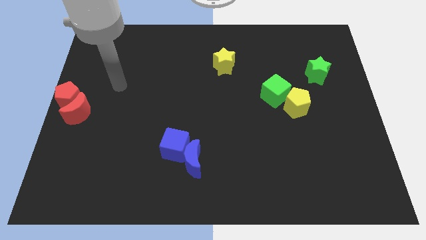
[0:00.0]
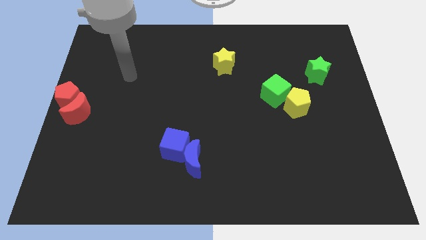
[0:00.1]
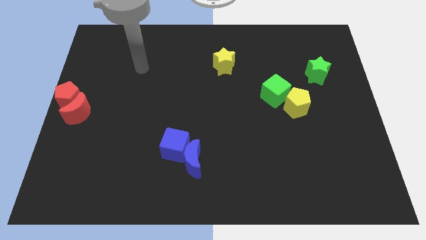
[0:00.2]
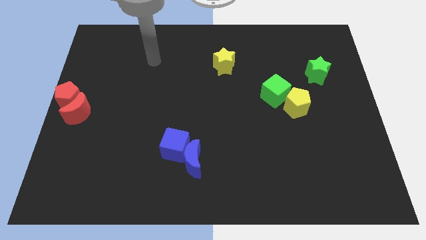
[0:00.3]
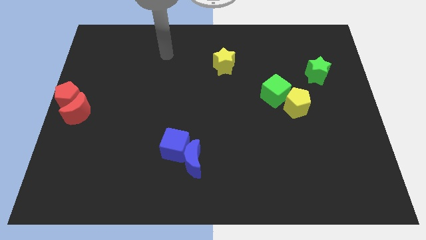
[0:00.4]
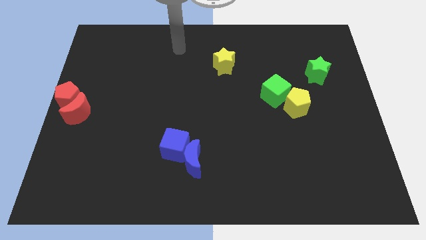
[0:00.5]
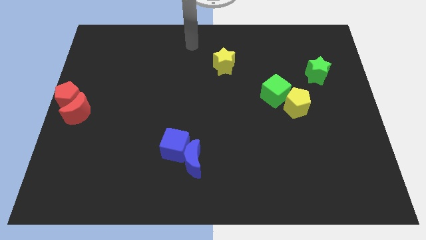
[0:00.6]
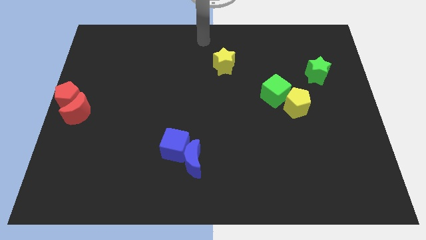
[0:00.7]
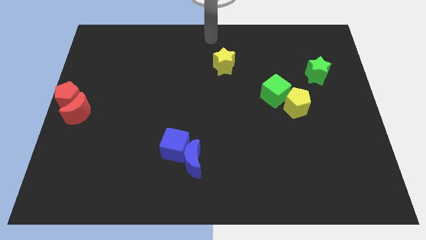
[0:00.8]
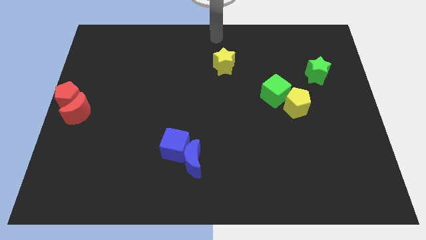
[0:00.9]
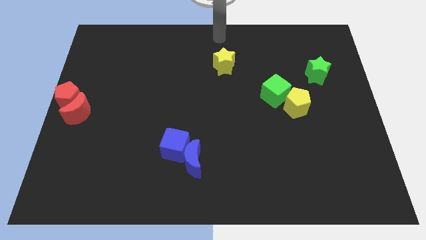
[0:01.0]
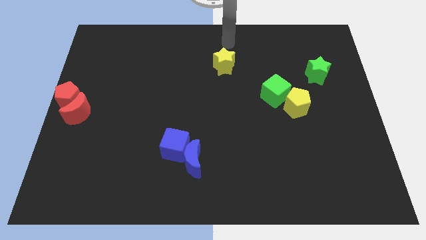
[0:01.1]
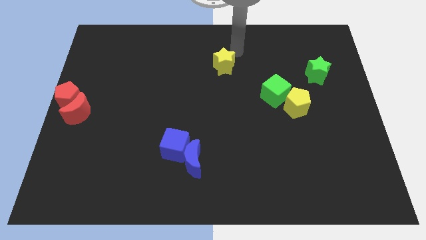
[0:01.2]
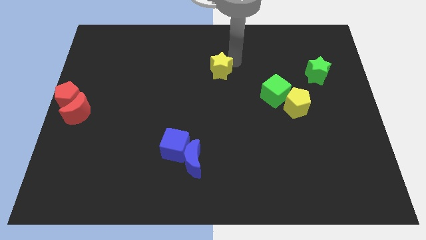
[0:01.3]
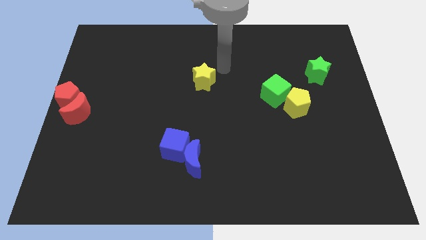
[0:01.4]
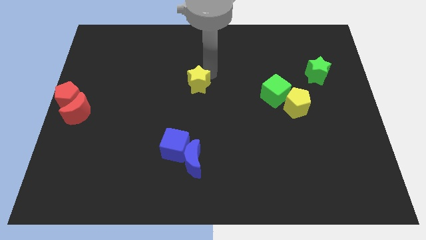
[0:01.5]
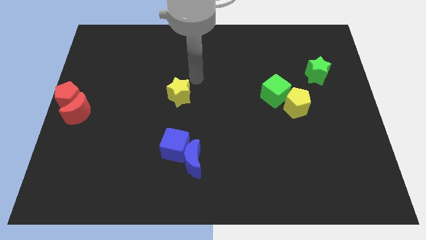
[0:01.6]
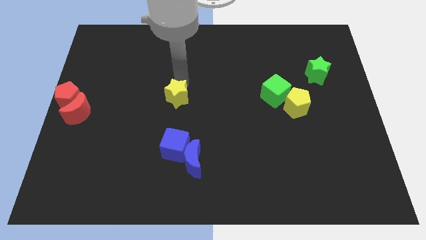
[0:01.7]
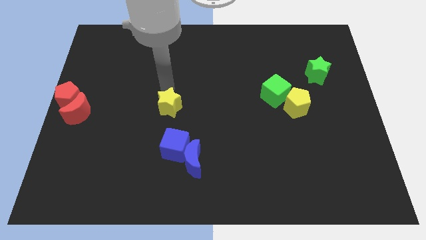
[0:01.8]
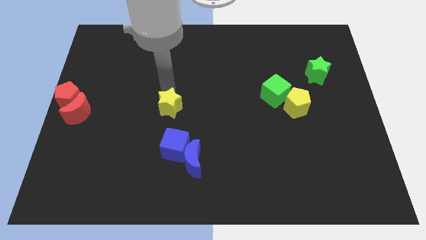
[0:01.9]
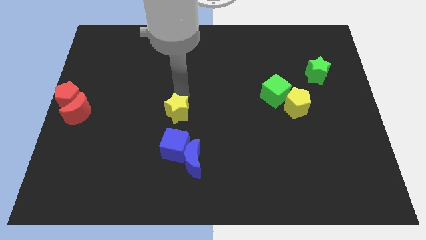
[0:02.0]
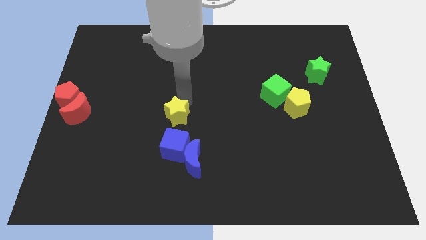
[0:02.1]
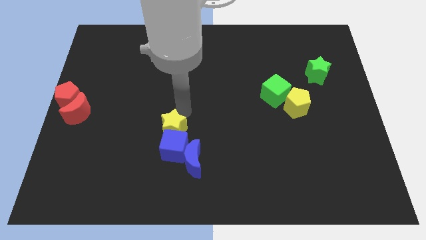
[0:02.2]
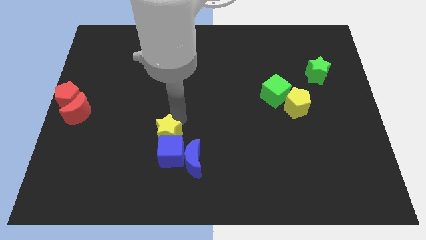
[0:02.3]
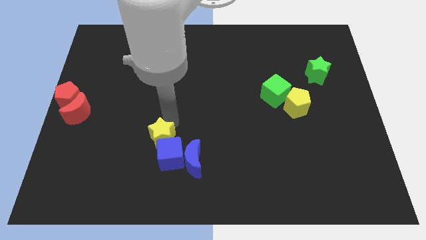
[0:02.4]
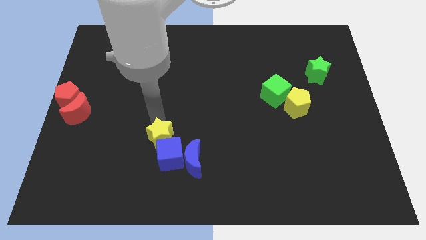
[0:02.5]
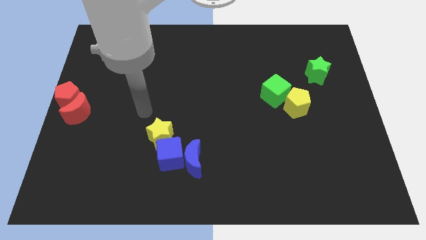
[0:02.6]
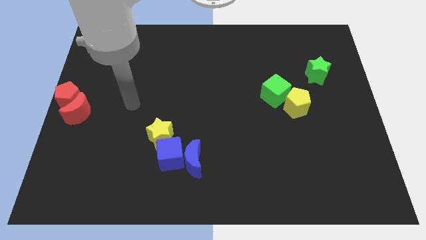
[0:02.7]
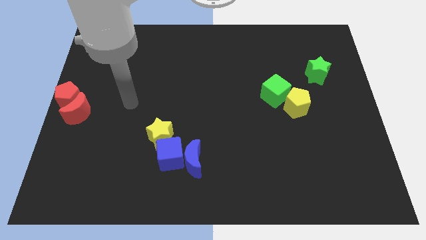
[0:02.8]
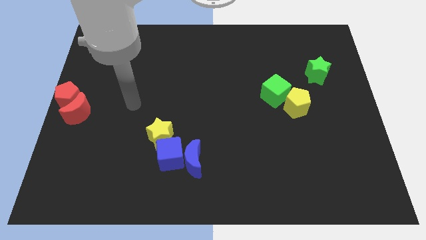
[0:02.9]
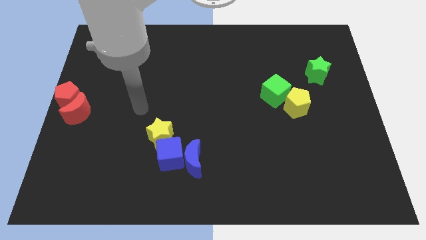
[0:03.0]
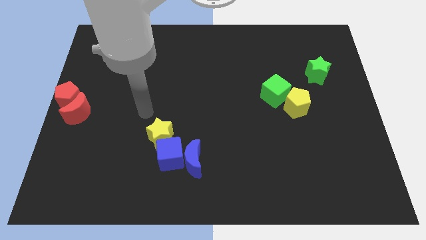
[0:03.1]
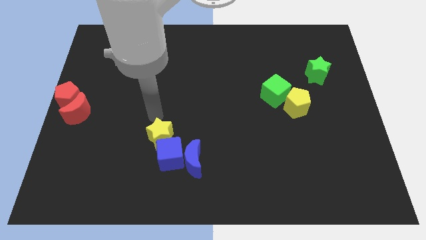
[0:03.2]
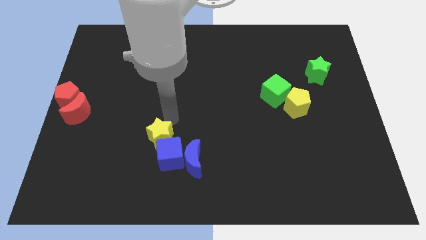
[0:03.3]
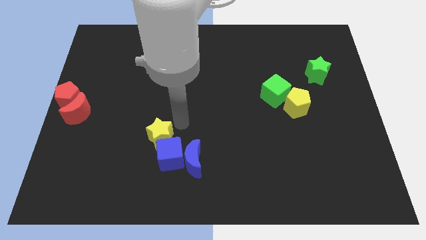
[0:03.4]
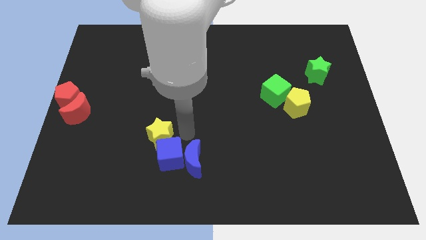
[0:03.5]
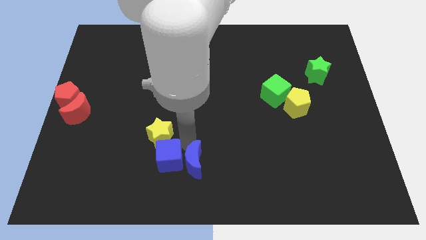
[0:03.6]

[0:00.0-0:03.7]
push the yellow star into the blue cube

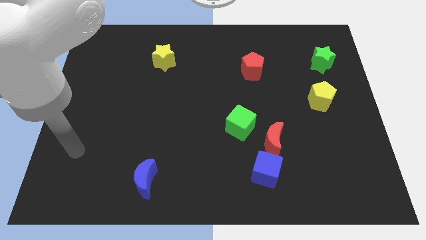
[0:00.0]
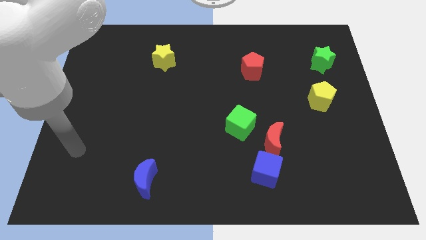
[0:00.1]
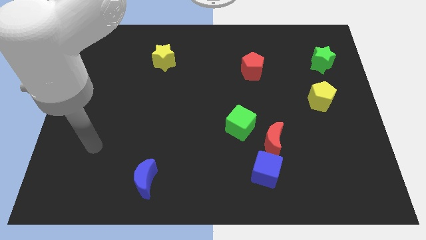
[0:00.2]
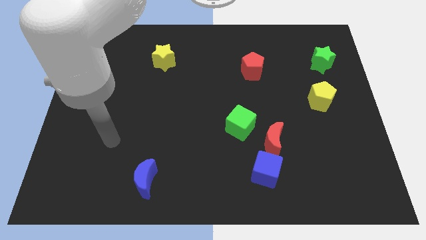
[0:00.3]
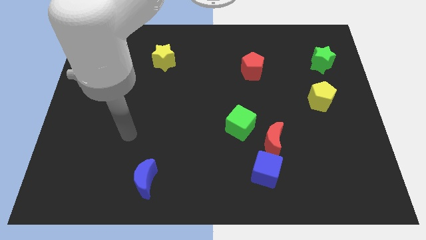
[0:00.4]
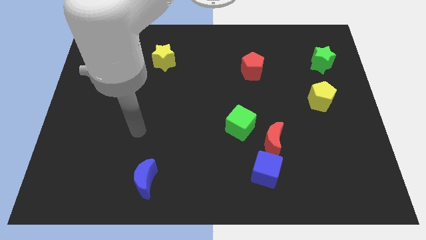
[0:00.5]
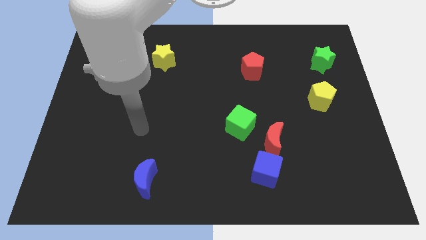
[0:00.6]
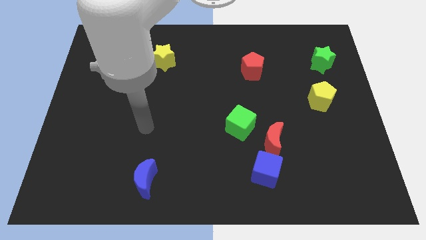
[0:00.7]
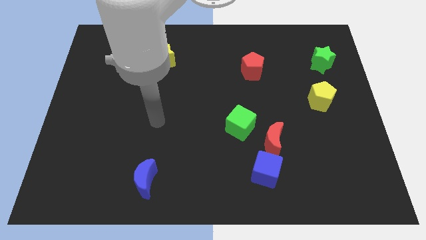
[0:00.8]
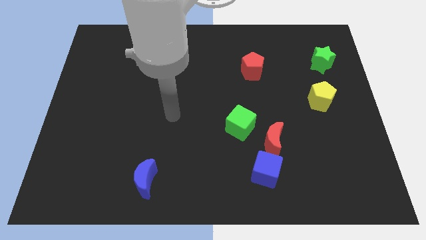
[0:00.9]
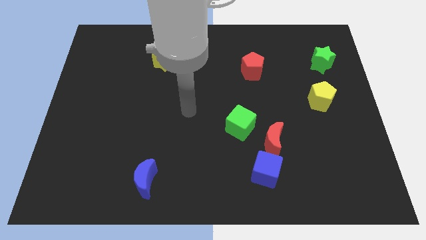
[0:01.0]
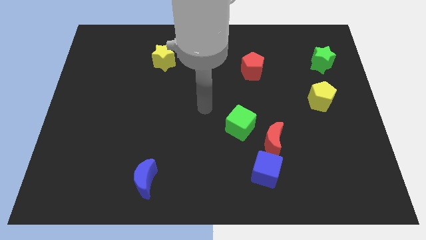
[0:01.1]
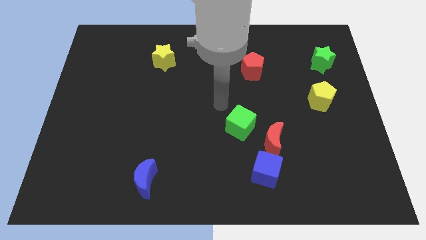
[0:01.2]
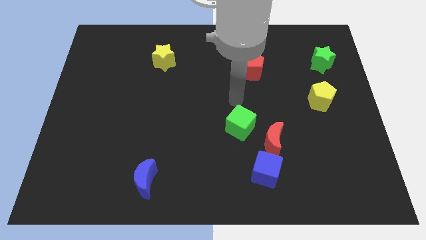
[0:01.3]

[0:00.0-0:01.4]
place your arm above green cube

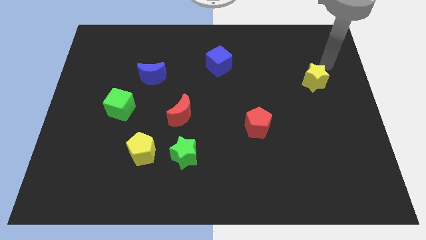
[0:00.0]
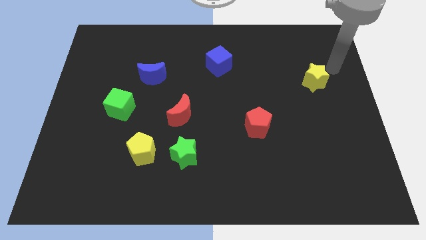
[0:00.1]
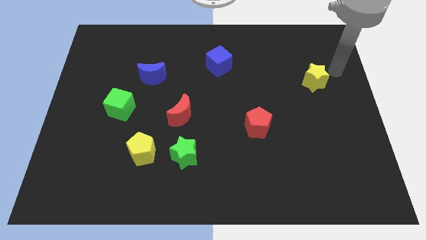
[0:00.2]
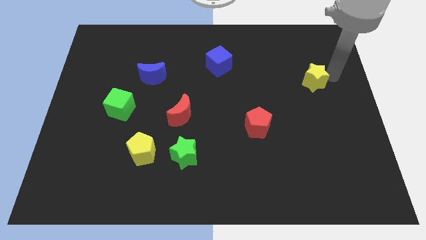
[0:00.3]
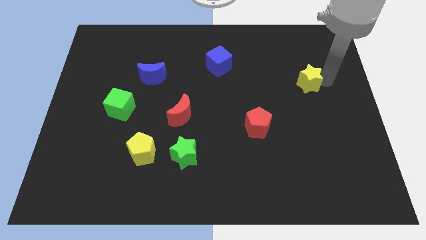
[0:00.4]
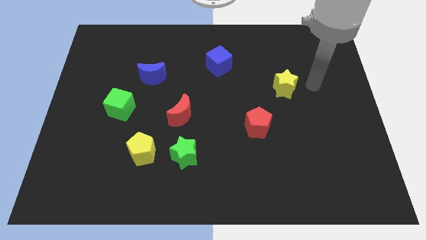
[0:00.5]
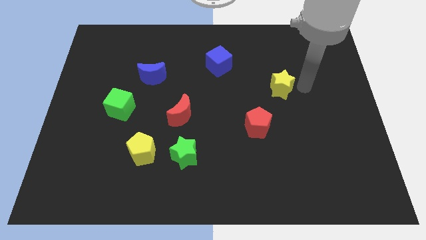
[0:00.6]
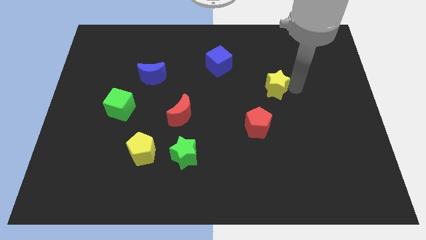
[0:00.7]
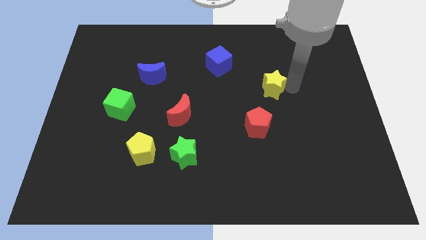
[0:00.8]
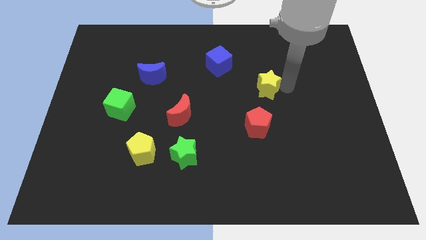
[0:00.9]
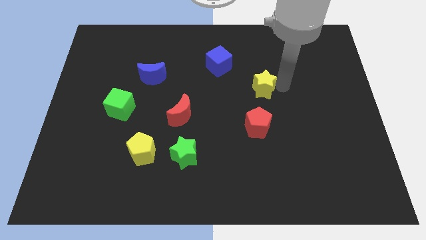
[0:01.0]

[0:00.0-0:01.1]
move the yellow star above the red pentagon

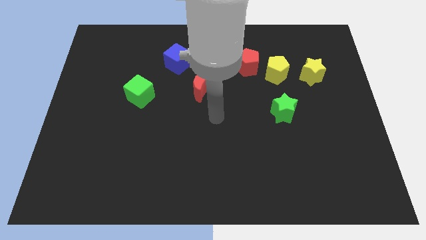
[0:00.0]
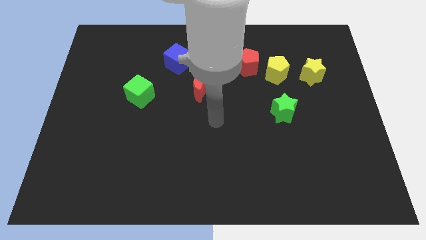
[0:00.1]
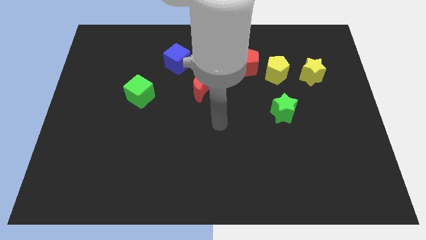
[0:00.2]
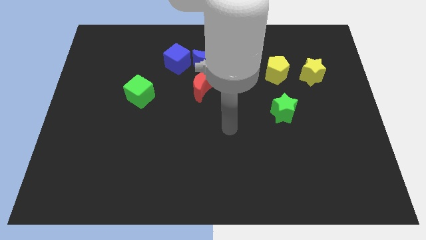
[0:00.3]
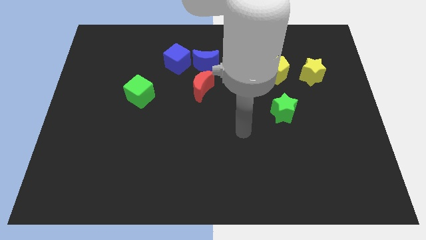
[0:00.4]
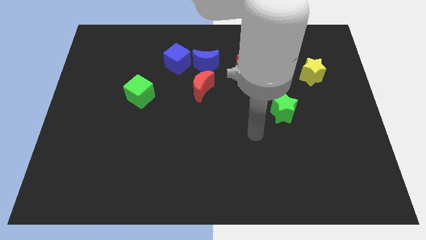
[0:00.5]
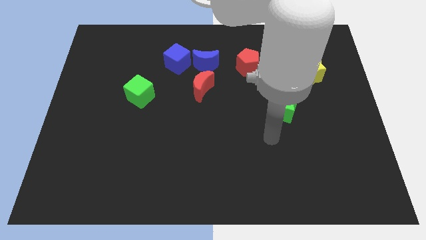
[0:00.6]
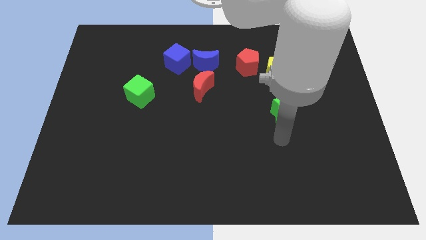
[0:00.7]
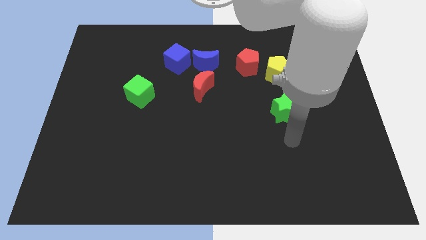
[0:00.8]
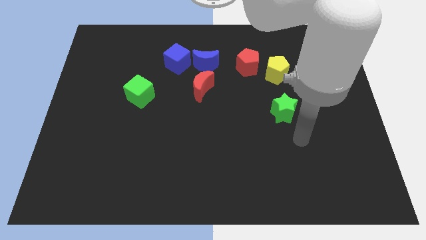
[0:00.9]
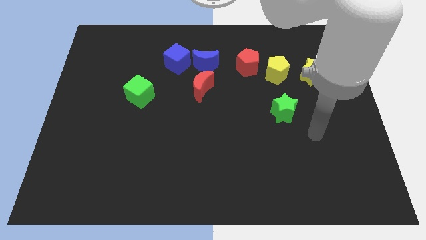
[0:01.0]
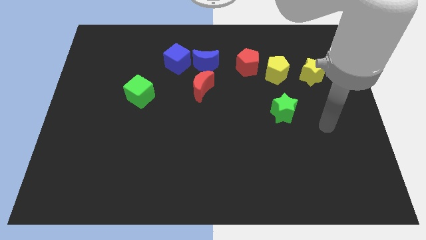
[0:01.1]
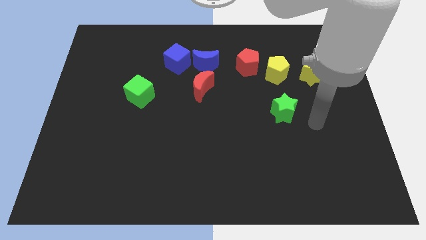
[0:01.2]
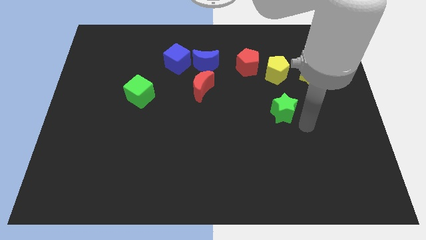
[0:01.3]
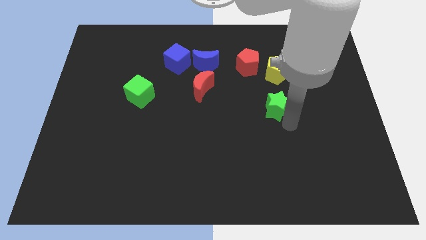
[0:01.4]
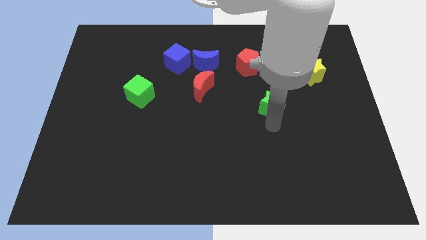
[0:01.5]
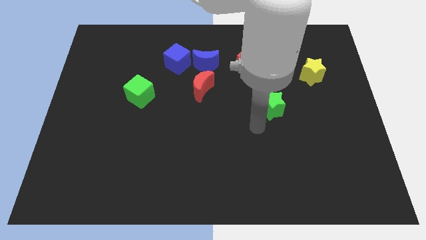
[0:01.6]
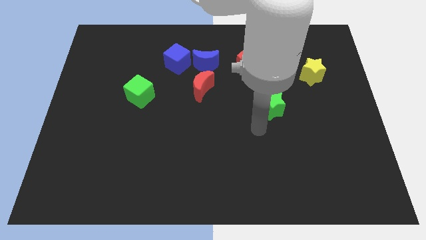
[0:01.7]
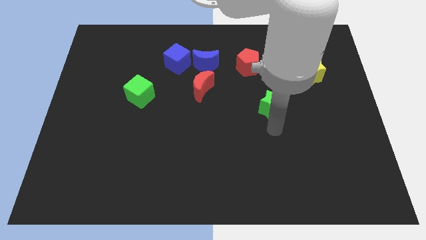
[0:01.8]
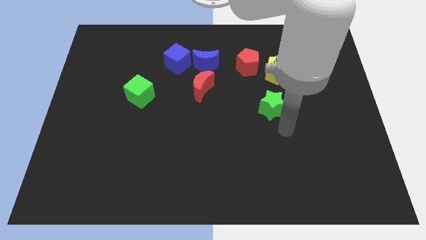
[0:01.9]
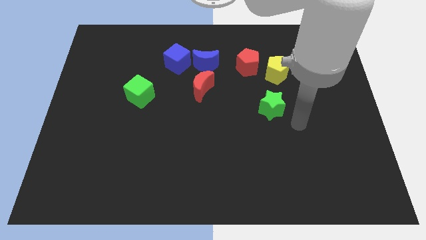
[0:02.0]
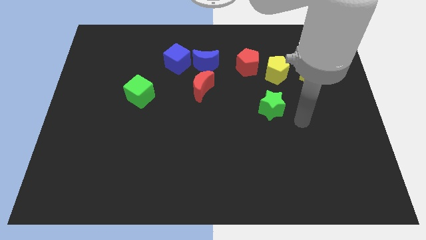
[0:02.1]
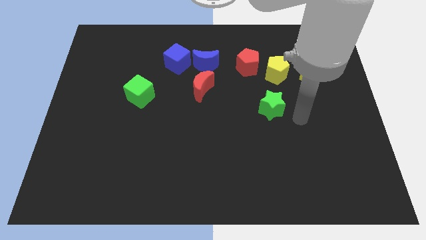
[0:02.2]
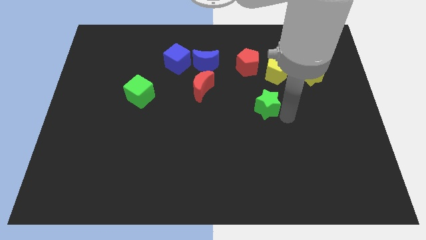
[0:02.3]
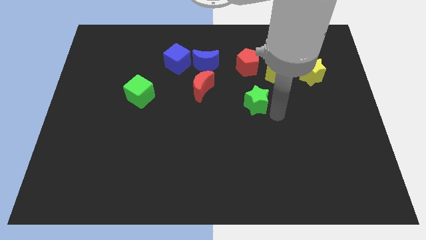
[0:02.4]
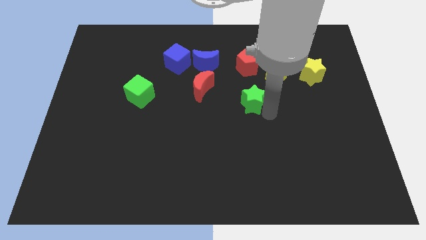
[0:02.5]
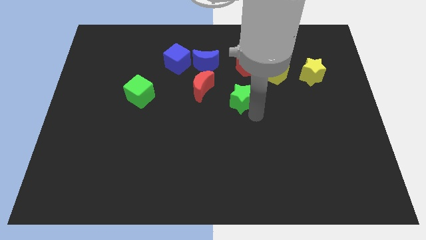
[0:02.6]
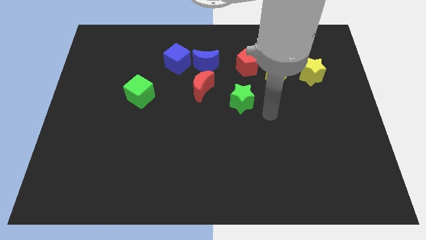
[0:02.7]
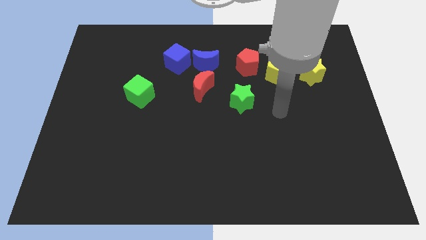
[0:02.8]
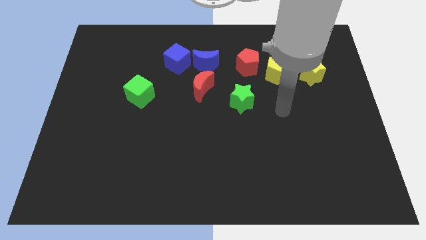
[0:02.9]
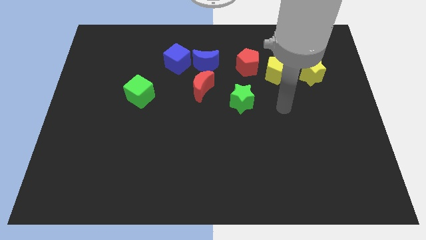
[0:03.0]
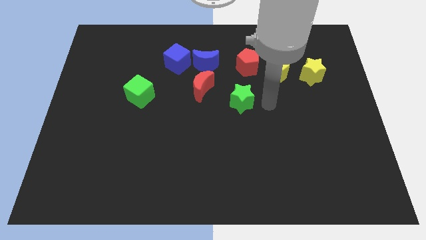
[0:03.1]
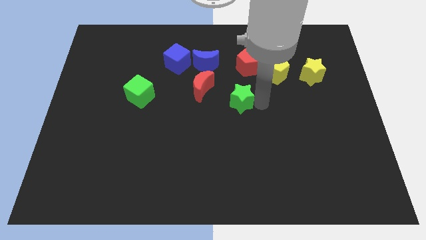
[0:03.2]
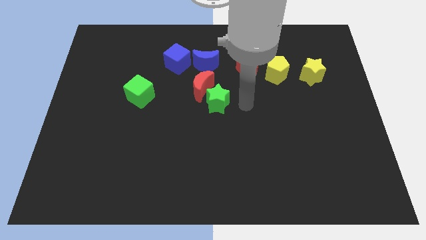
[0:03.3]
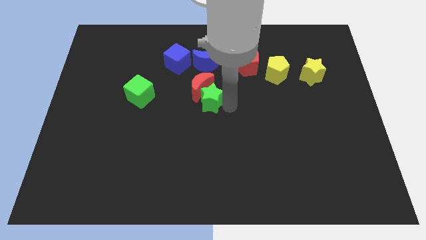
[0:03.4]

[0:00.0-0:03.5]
push the green star to the center of the board
